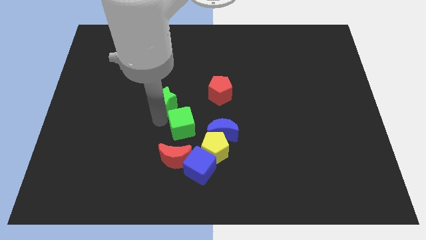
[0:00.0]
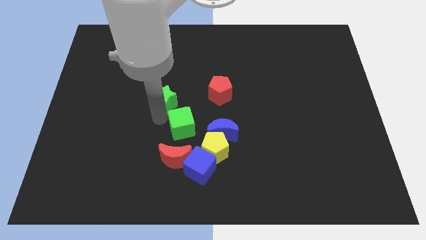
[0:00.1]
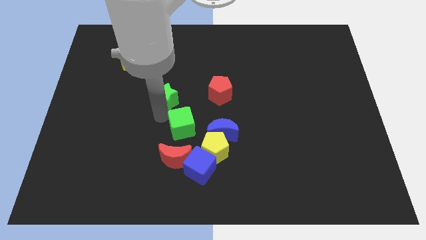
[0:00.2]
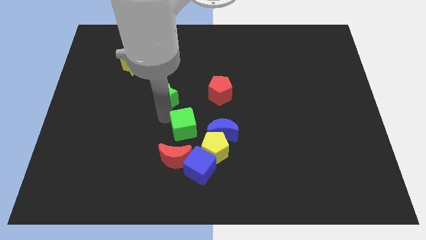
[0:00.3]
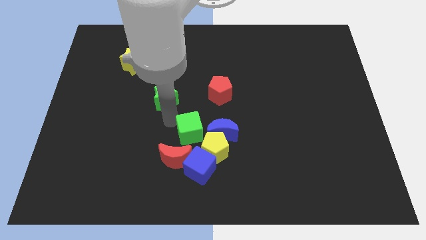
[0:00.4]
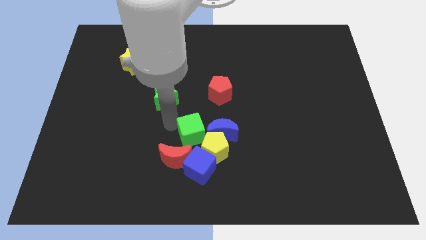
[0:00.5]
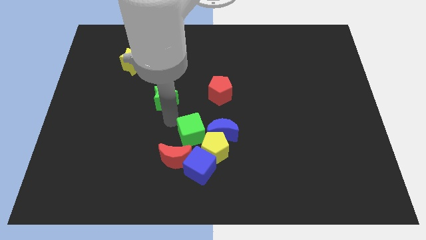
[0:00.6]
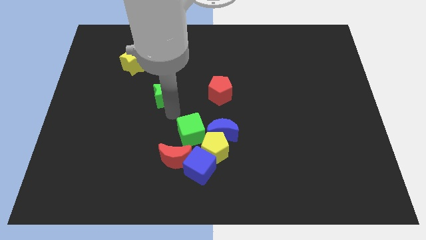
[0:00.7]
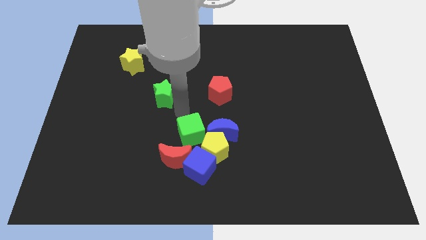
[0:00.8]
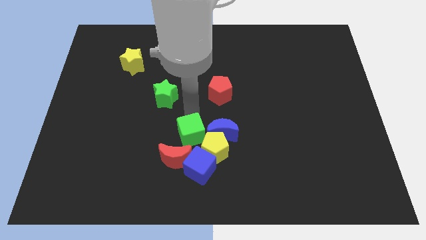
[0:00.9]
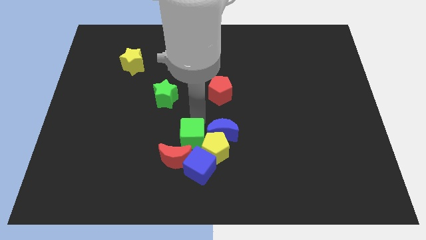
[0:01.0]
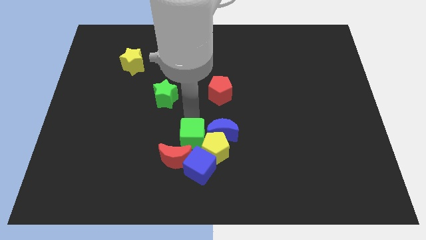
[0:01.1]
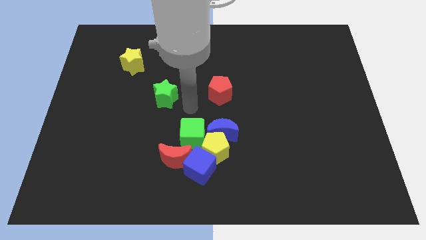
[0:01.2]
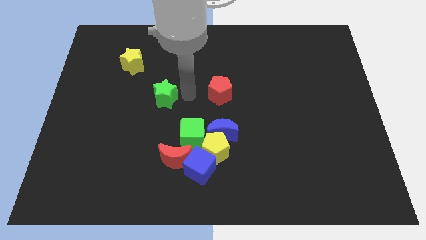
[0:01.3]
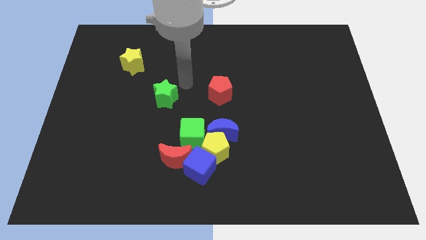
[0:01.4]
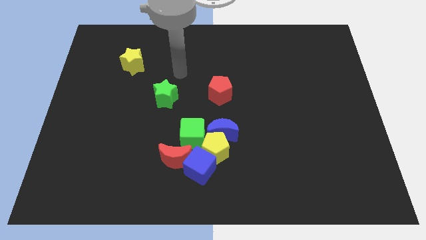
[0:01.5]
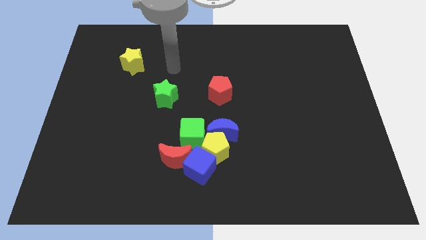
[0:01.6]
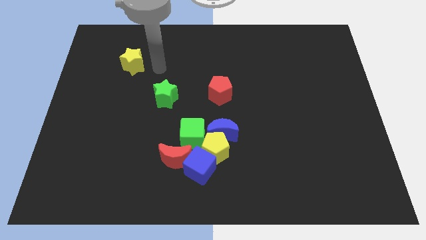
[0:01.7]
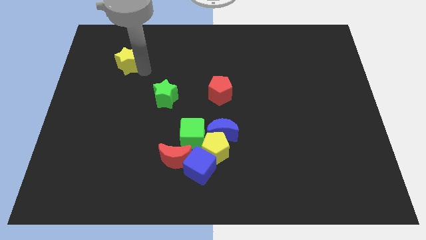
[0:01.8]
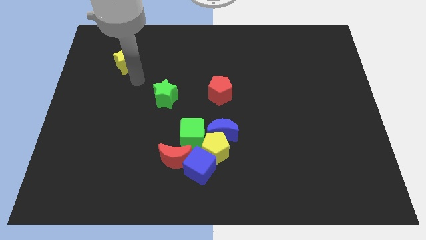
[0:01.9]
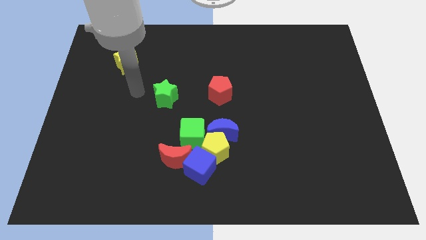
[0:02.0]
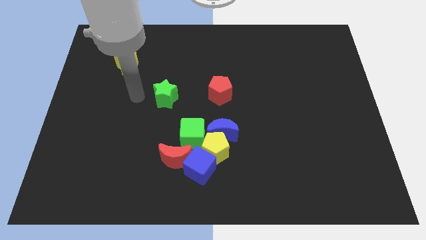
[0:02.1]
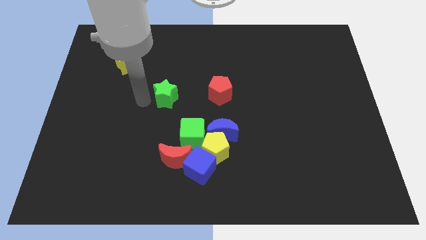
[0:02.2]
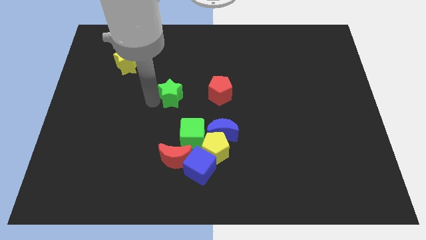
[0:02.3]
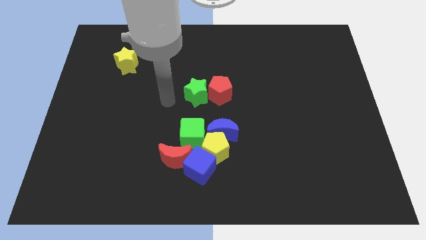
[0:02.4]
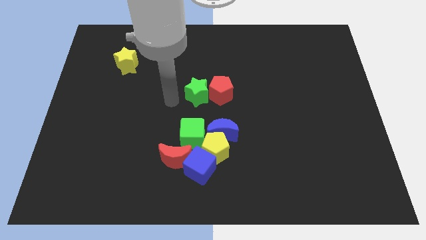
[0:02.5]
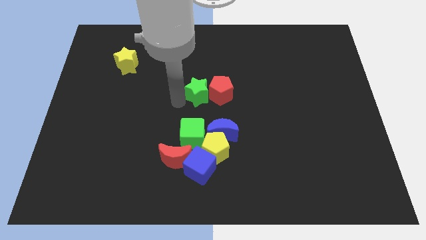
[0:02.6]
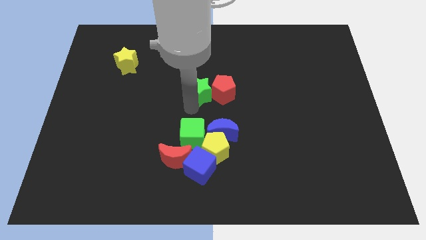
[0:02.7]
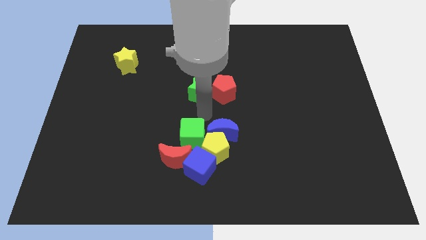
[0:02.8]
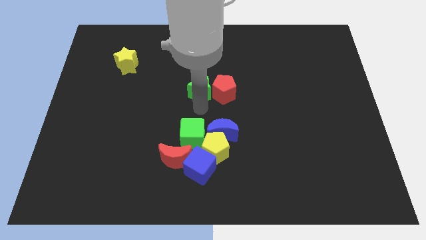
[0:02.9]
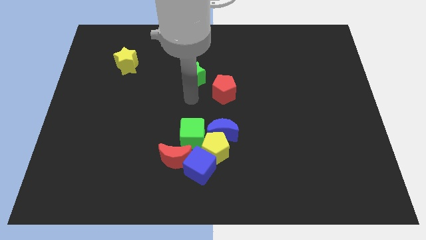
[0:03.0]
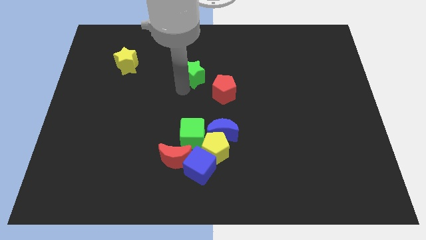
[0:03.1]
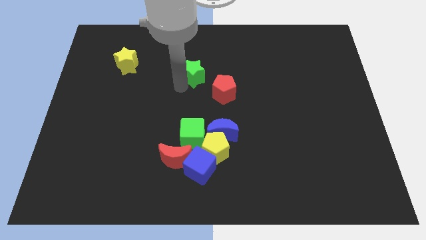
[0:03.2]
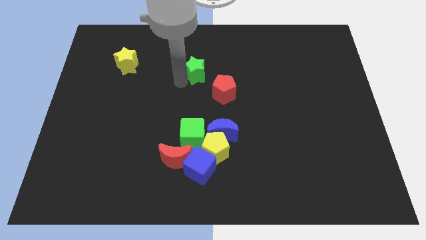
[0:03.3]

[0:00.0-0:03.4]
push the green cube towards the yellow pentagon

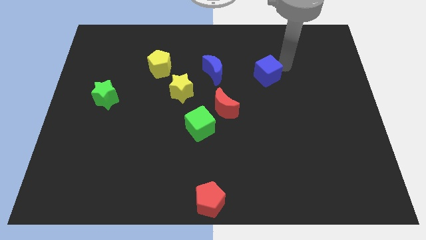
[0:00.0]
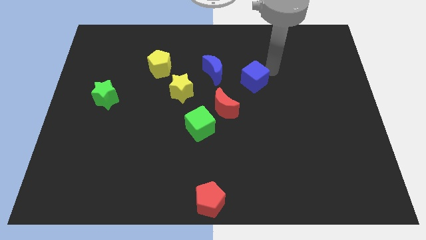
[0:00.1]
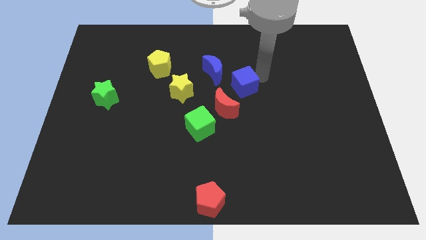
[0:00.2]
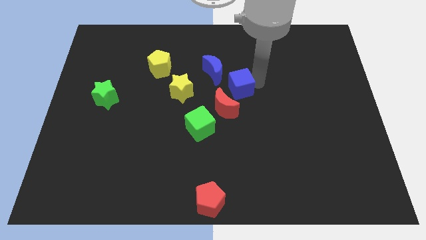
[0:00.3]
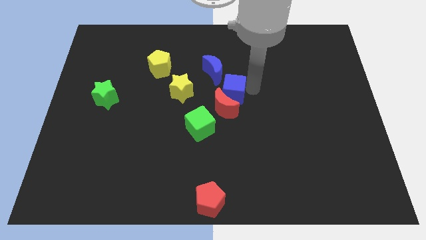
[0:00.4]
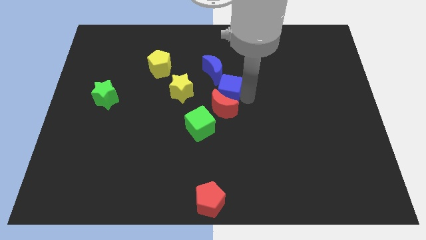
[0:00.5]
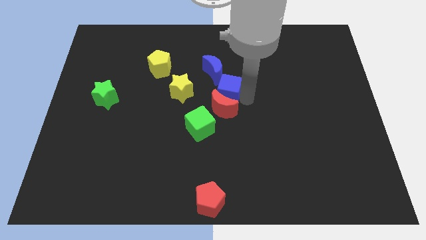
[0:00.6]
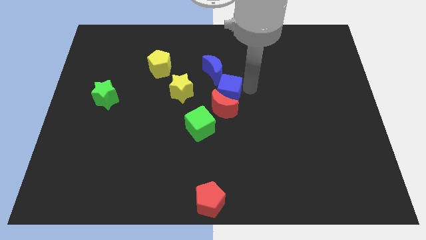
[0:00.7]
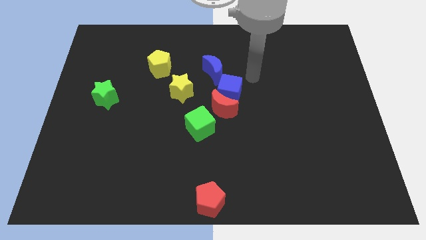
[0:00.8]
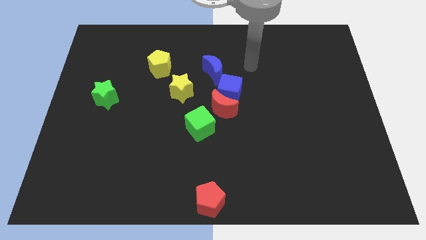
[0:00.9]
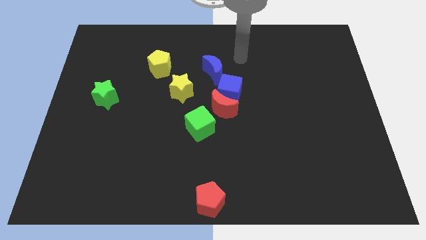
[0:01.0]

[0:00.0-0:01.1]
push the blue cube into the red crescent

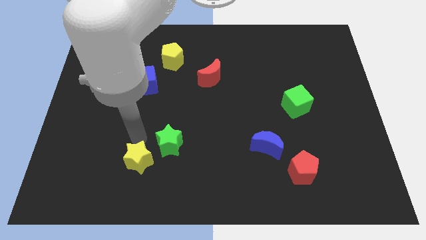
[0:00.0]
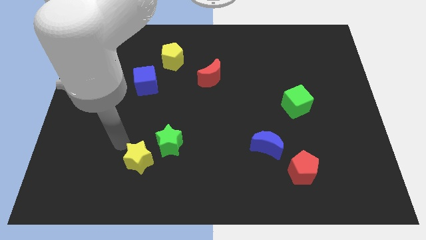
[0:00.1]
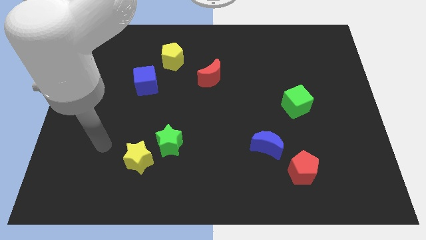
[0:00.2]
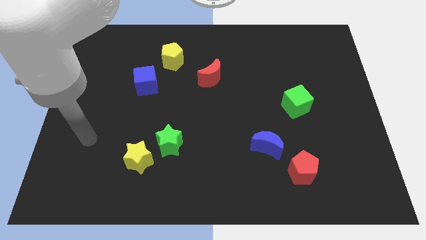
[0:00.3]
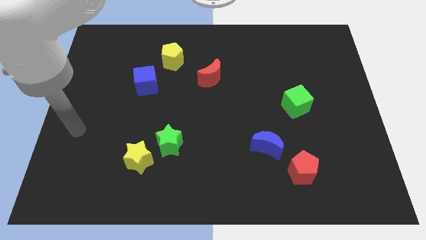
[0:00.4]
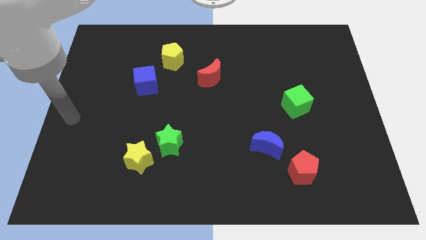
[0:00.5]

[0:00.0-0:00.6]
move arm at center left of board

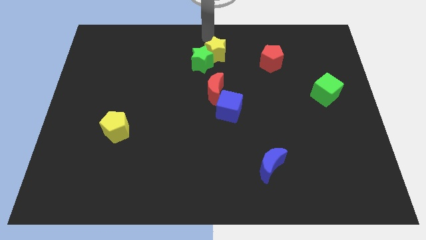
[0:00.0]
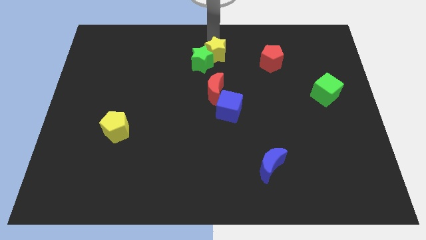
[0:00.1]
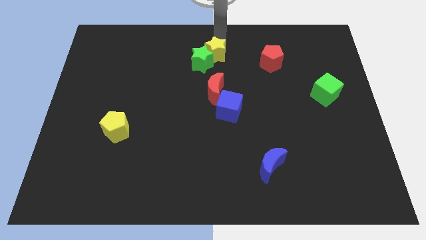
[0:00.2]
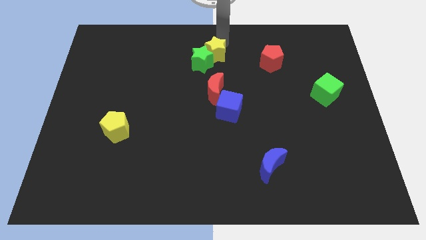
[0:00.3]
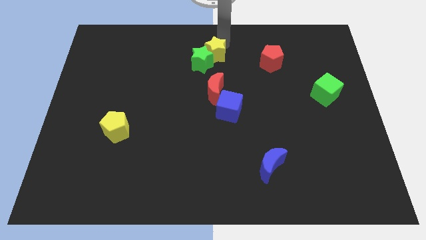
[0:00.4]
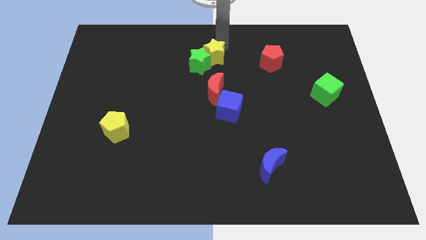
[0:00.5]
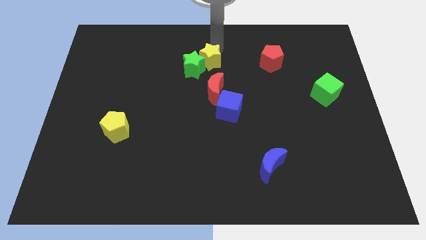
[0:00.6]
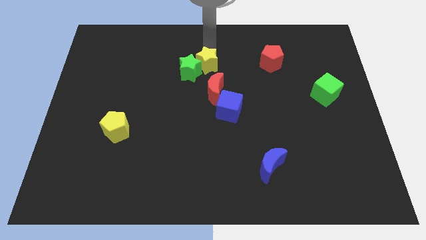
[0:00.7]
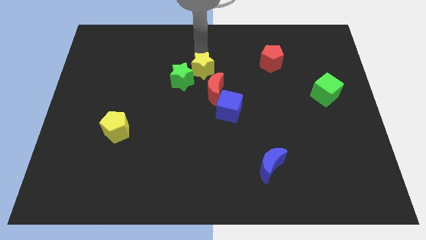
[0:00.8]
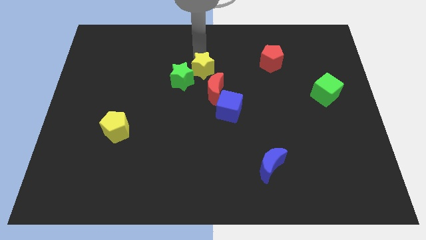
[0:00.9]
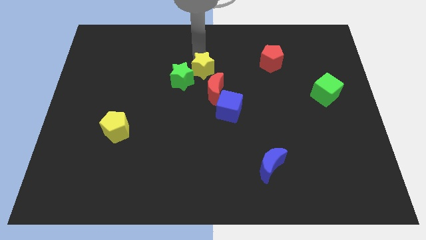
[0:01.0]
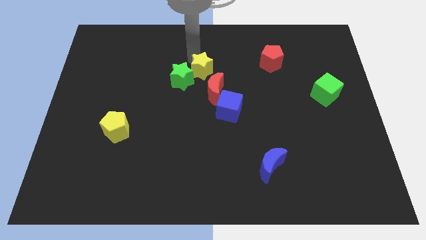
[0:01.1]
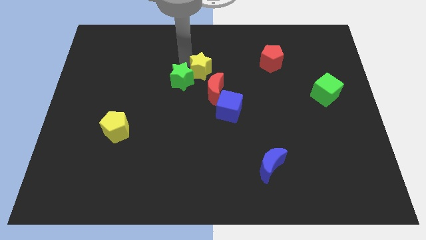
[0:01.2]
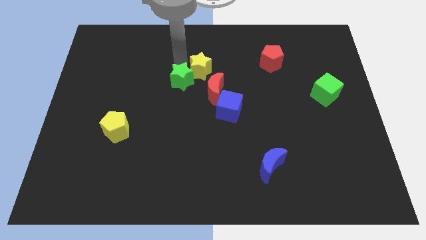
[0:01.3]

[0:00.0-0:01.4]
push the yellow star towards the green star

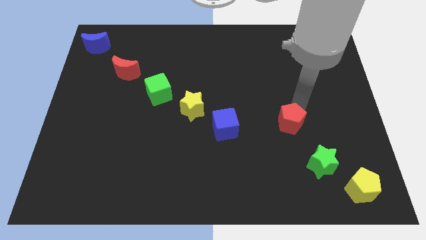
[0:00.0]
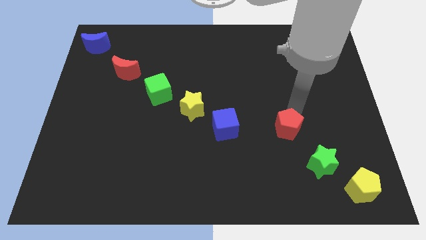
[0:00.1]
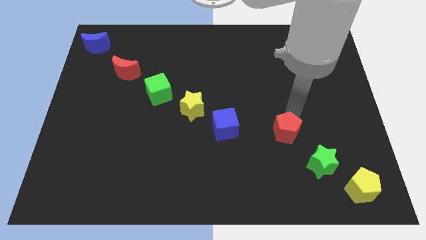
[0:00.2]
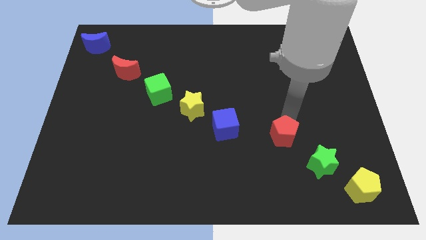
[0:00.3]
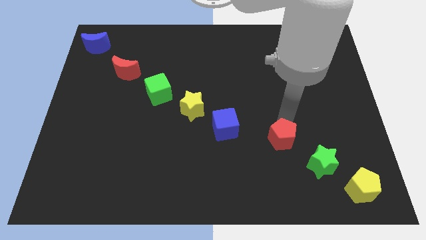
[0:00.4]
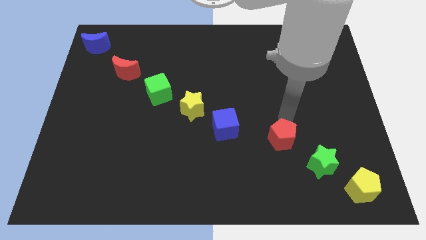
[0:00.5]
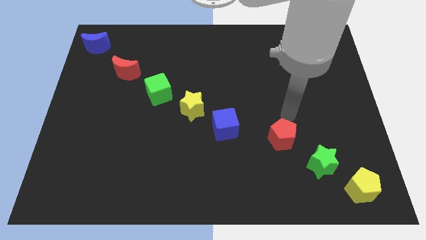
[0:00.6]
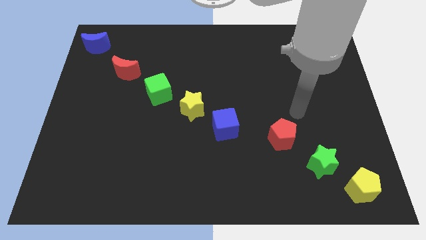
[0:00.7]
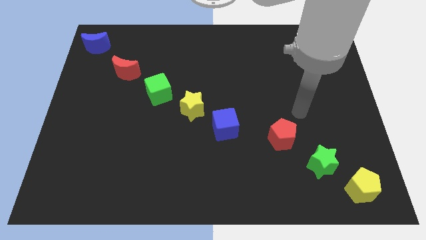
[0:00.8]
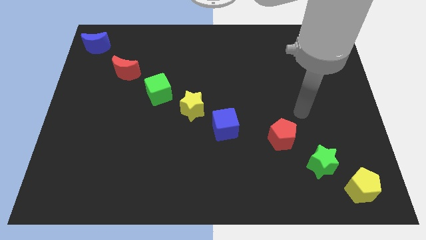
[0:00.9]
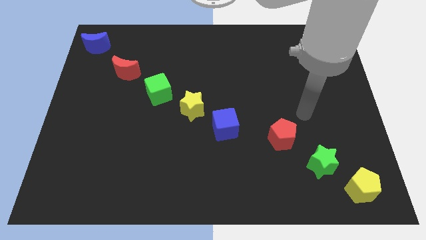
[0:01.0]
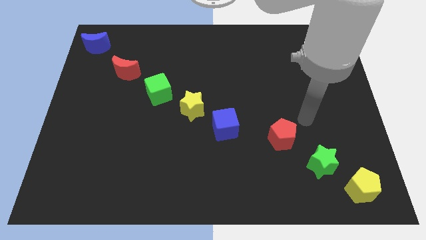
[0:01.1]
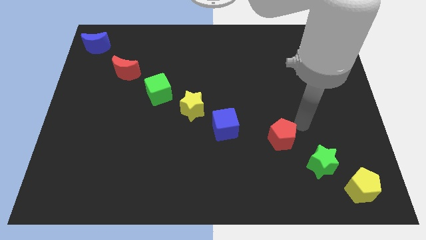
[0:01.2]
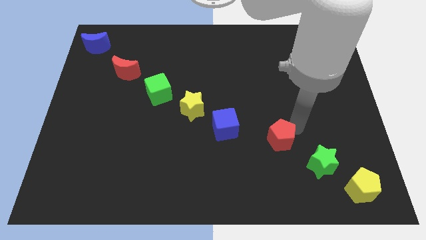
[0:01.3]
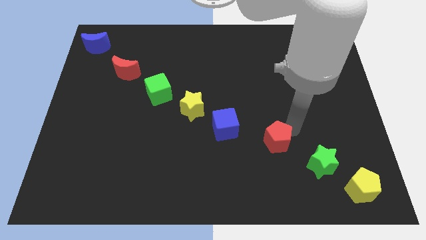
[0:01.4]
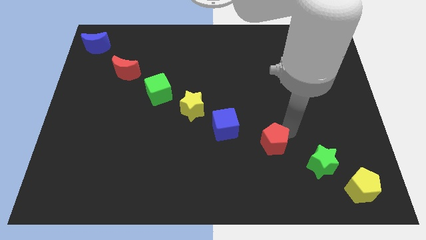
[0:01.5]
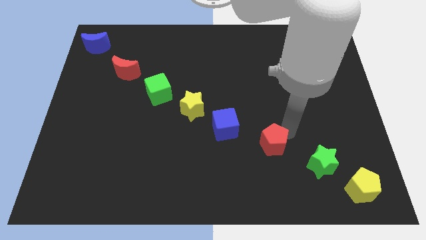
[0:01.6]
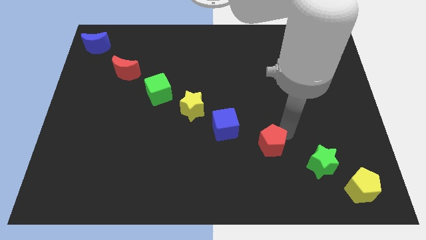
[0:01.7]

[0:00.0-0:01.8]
place the red pentagon in between the blue cube and green star

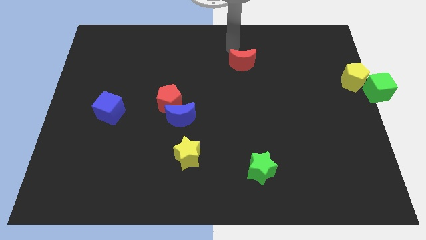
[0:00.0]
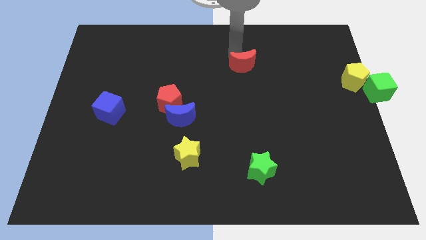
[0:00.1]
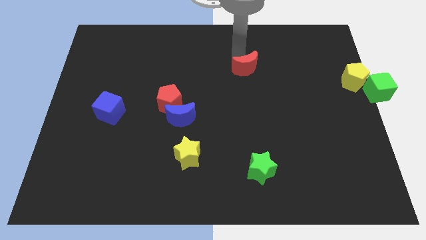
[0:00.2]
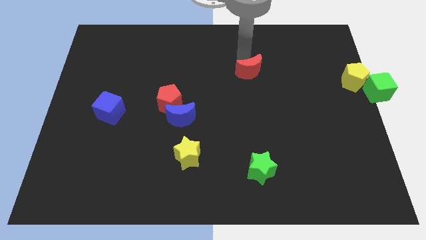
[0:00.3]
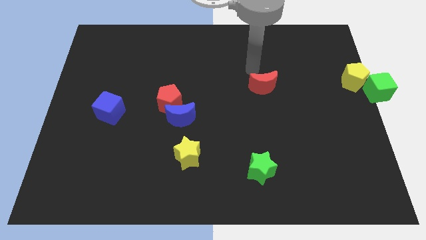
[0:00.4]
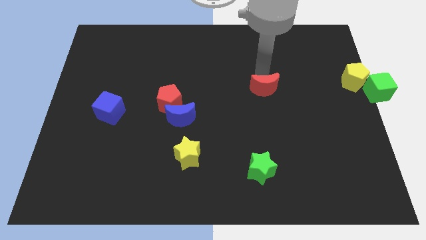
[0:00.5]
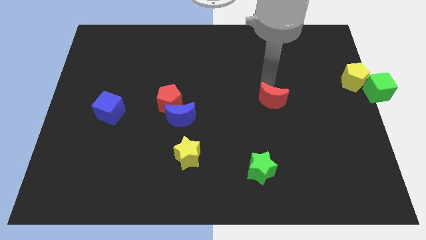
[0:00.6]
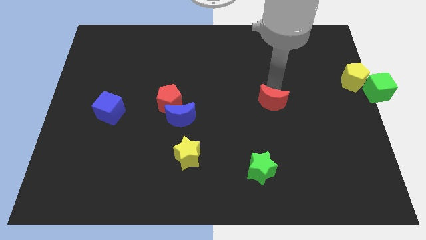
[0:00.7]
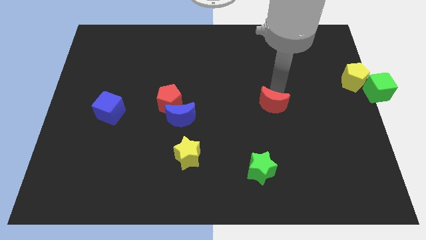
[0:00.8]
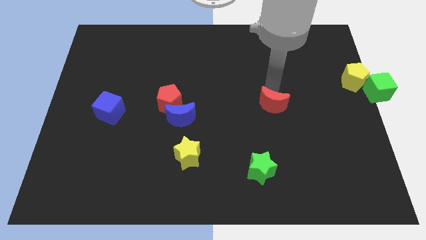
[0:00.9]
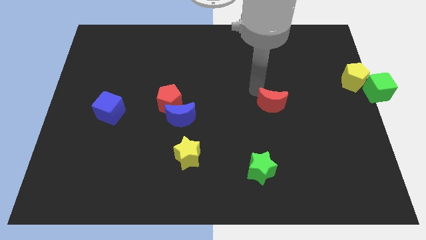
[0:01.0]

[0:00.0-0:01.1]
push red moon downwards
